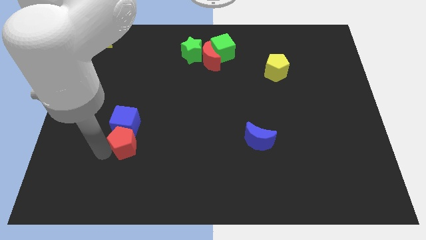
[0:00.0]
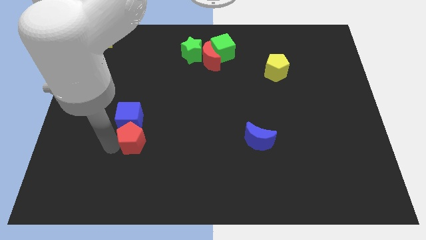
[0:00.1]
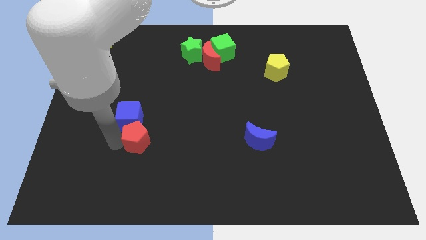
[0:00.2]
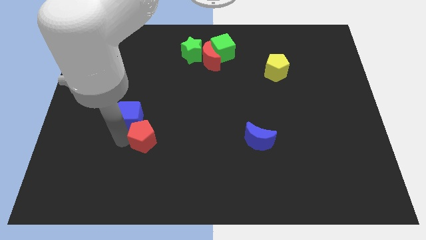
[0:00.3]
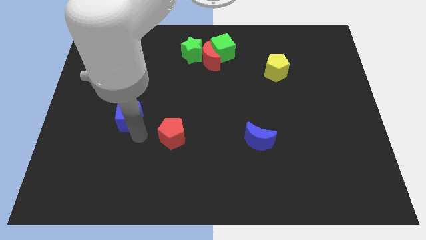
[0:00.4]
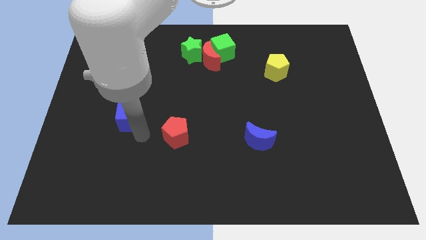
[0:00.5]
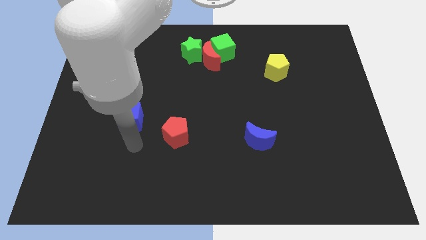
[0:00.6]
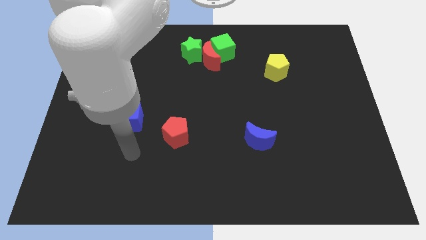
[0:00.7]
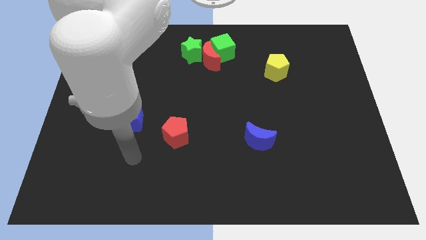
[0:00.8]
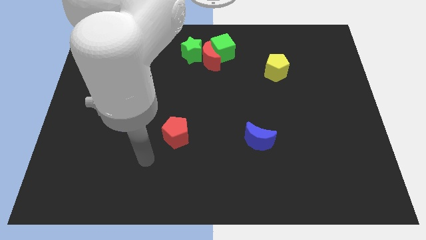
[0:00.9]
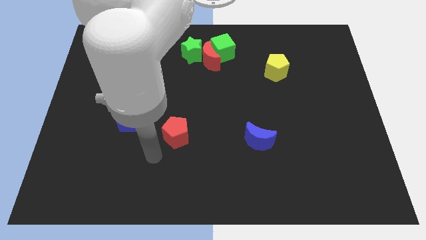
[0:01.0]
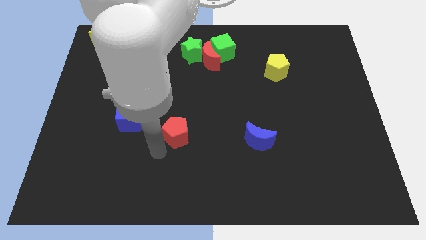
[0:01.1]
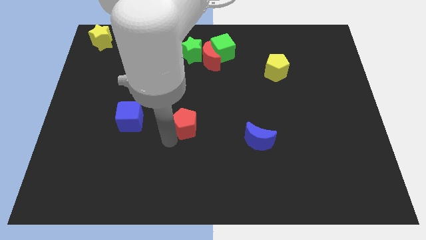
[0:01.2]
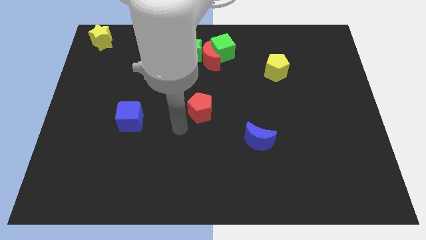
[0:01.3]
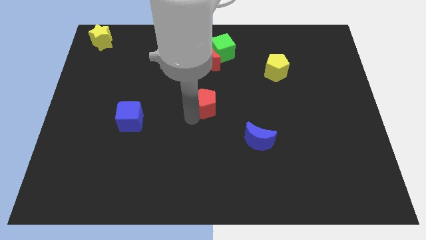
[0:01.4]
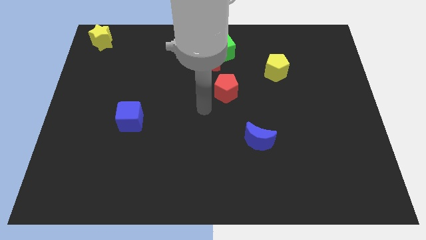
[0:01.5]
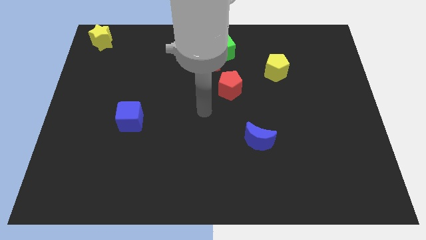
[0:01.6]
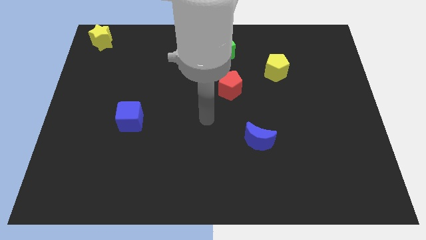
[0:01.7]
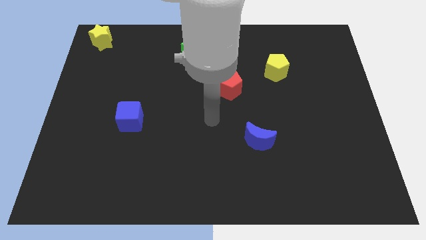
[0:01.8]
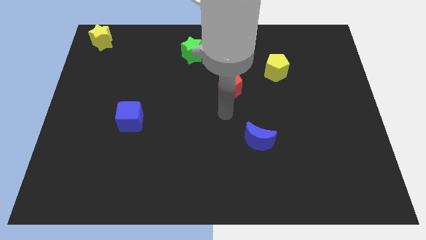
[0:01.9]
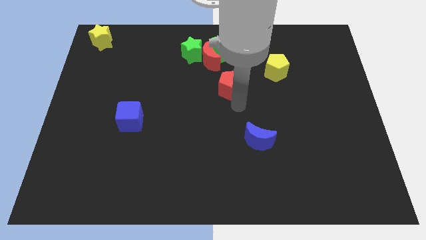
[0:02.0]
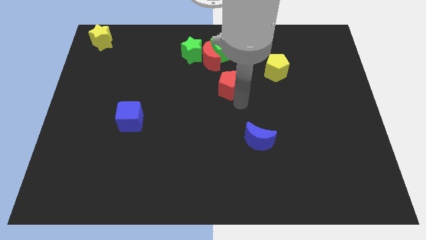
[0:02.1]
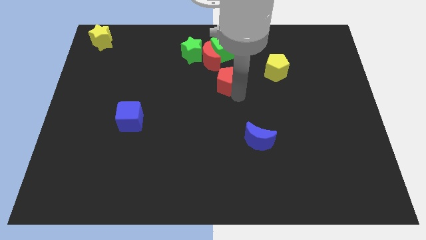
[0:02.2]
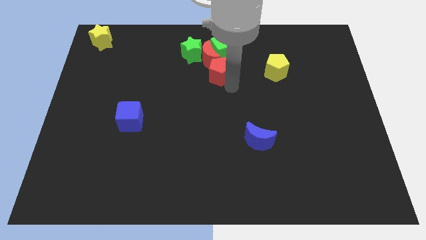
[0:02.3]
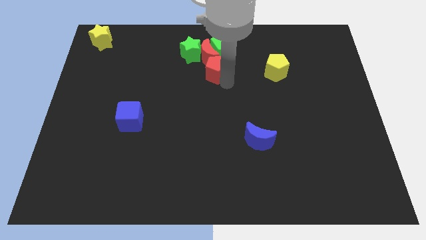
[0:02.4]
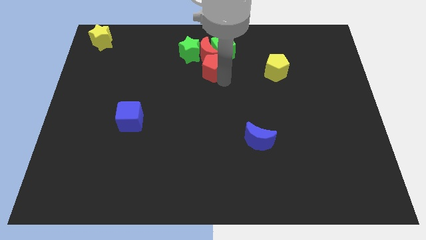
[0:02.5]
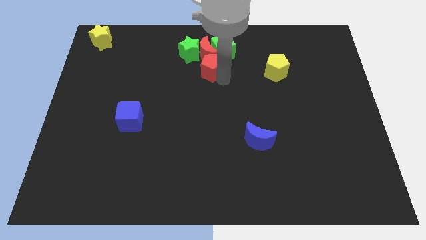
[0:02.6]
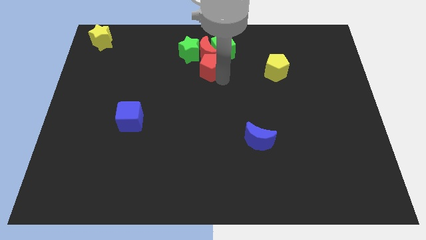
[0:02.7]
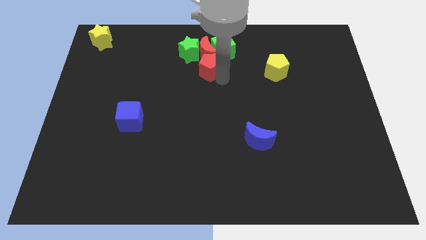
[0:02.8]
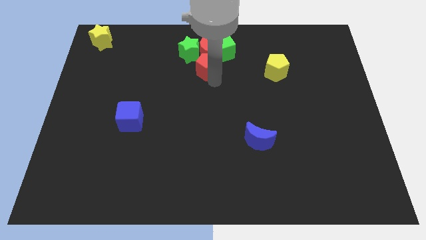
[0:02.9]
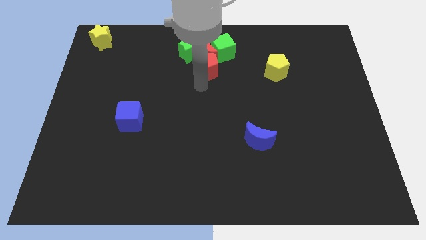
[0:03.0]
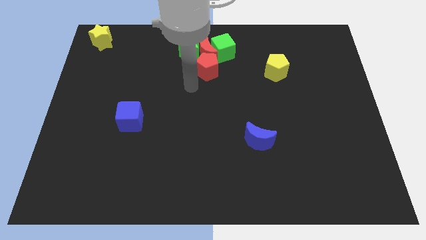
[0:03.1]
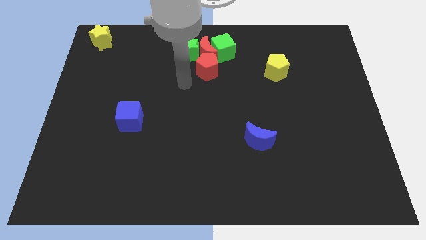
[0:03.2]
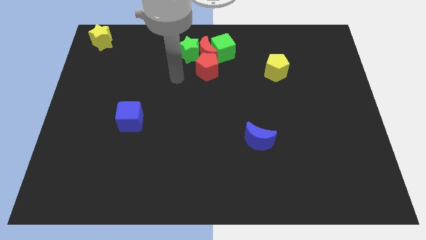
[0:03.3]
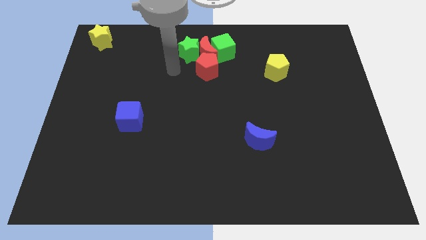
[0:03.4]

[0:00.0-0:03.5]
move the red pentagon below the red moon

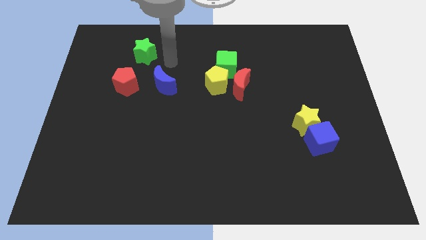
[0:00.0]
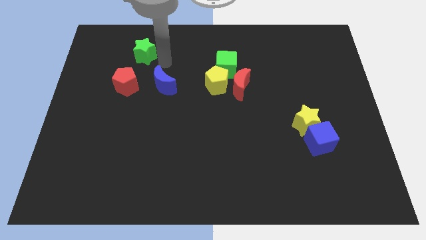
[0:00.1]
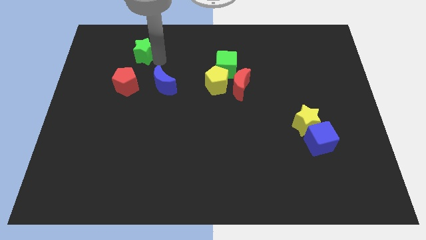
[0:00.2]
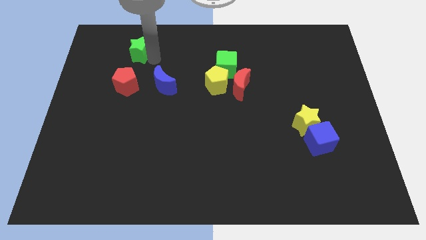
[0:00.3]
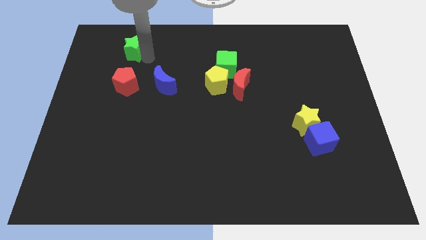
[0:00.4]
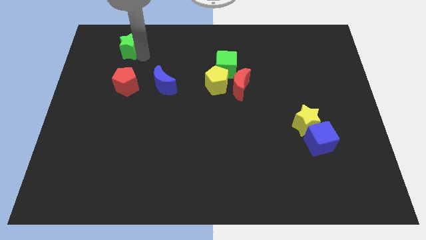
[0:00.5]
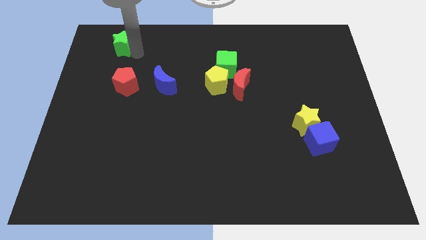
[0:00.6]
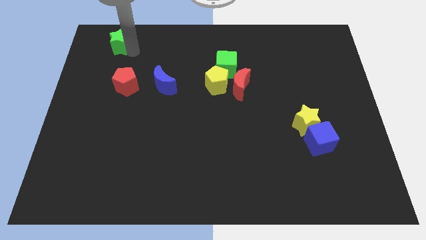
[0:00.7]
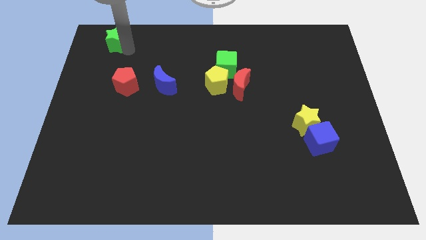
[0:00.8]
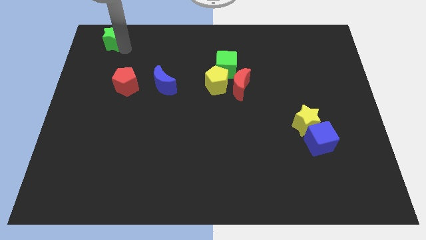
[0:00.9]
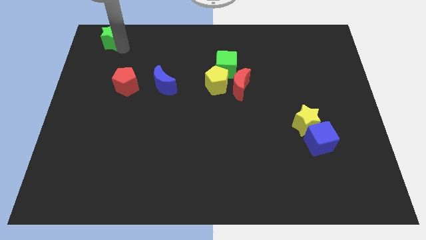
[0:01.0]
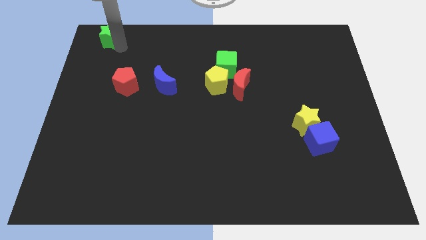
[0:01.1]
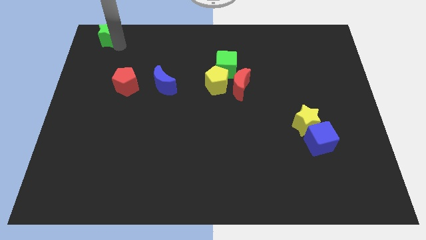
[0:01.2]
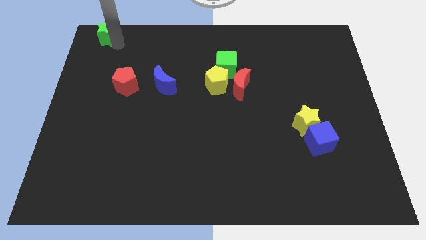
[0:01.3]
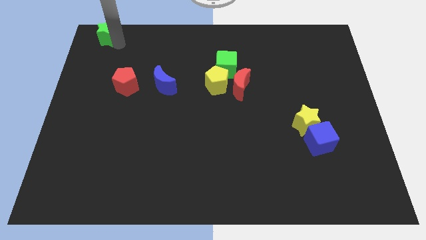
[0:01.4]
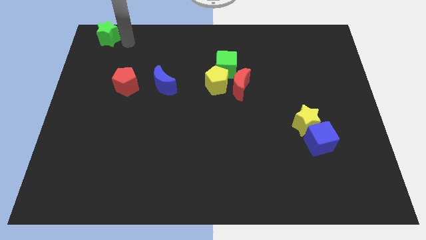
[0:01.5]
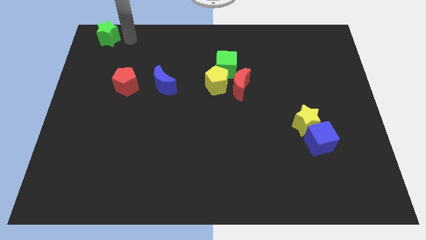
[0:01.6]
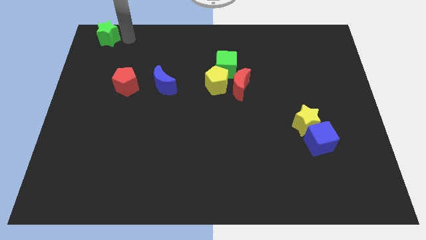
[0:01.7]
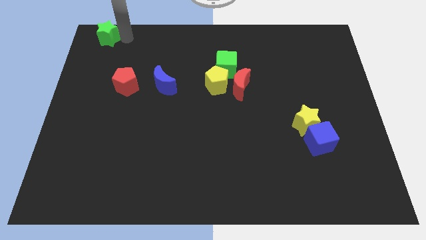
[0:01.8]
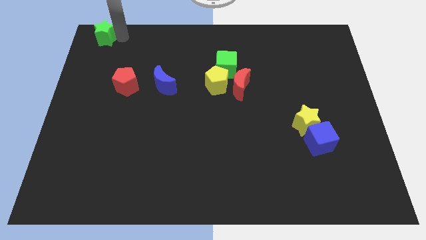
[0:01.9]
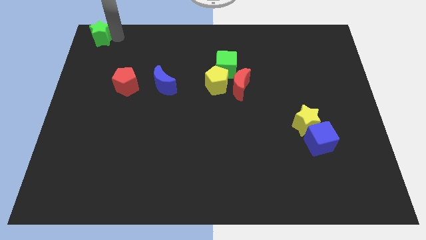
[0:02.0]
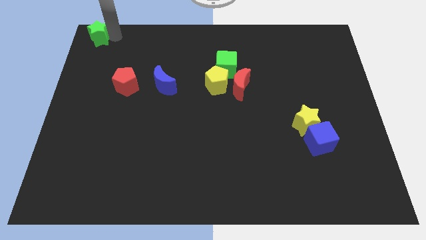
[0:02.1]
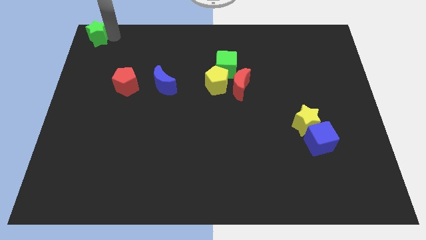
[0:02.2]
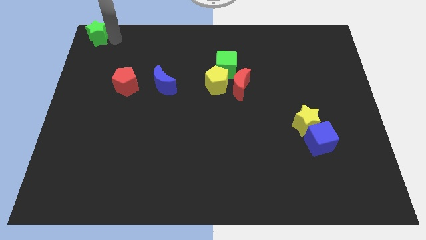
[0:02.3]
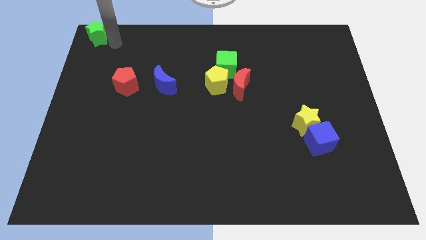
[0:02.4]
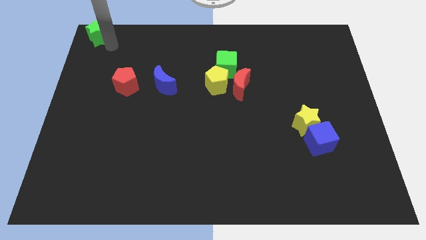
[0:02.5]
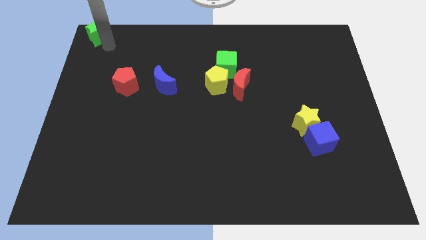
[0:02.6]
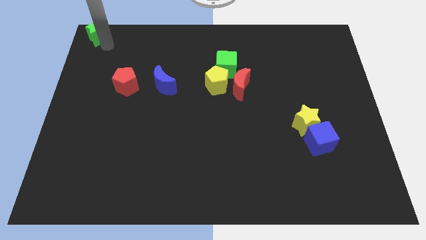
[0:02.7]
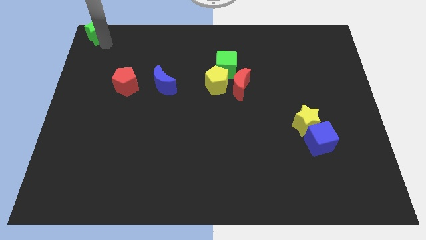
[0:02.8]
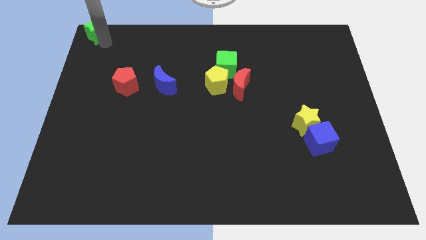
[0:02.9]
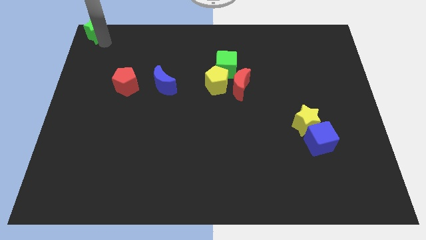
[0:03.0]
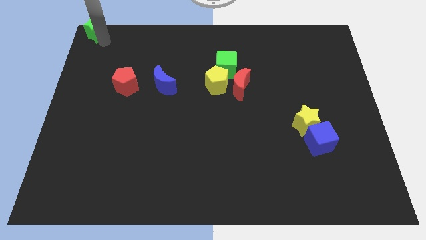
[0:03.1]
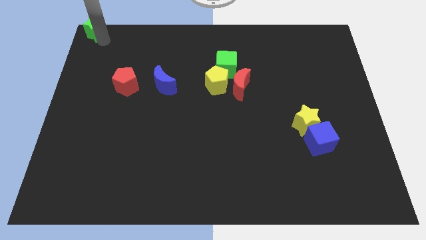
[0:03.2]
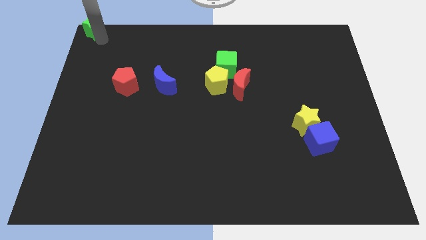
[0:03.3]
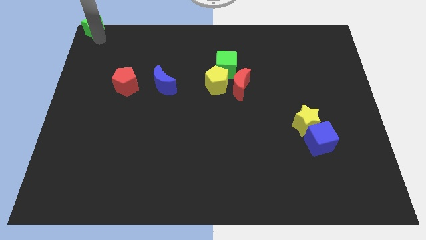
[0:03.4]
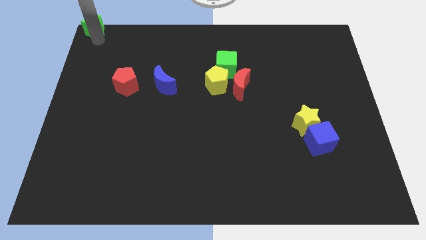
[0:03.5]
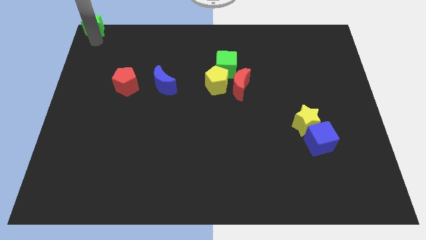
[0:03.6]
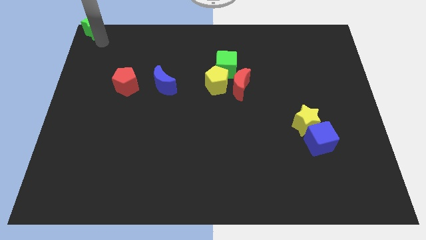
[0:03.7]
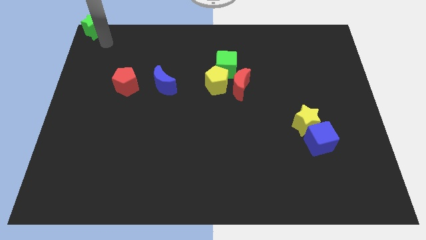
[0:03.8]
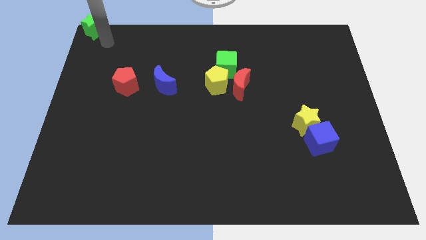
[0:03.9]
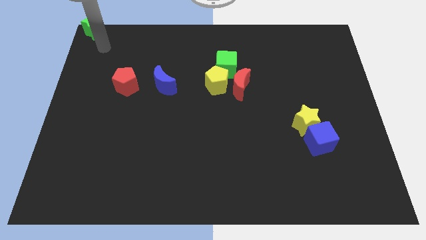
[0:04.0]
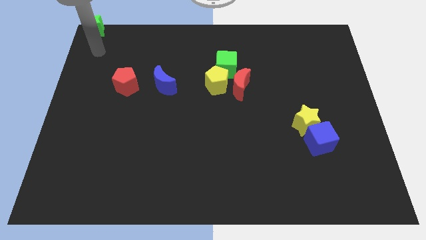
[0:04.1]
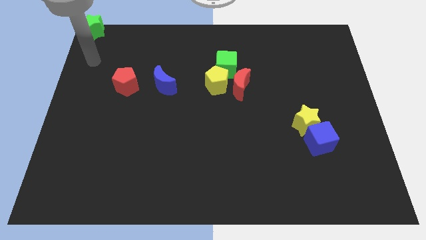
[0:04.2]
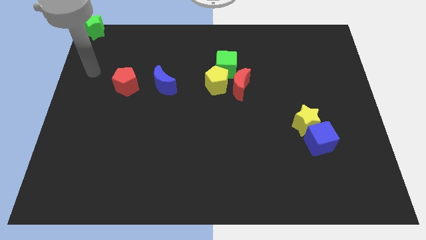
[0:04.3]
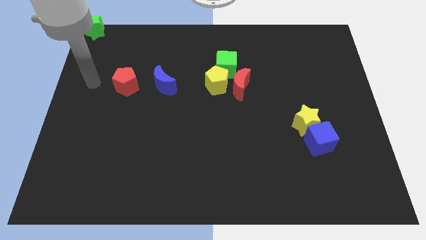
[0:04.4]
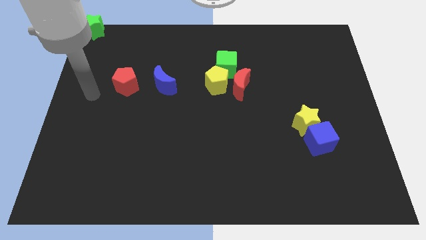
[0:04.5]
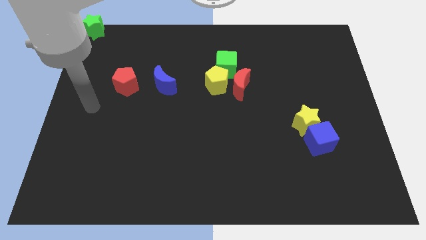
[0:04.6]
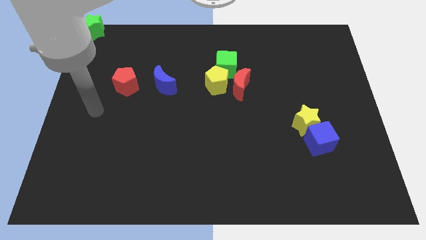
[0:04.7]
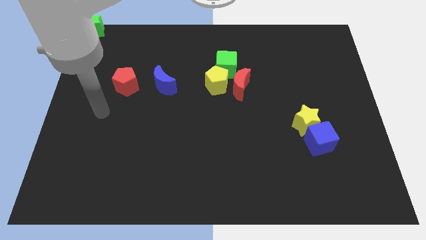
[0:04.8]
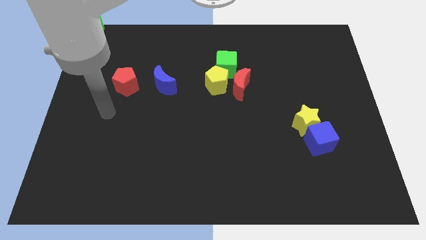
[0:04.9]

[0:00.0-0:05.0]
place the green star at the top left

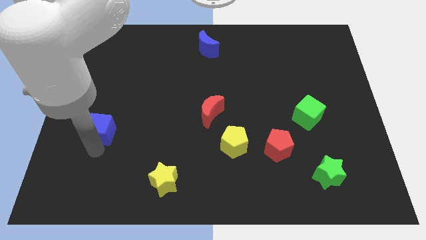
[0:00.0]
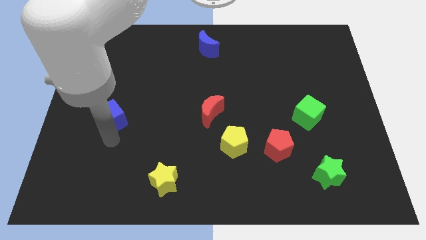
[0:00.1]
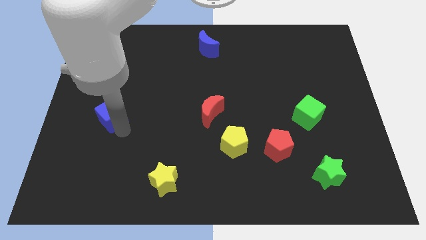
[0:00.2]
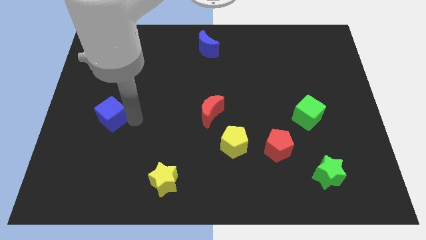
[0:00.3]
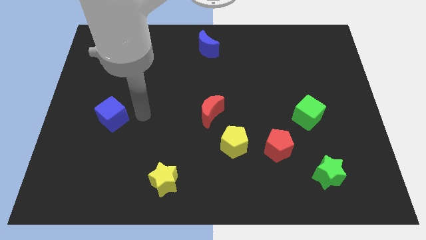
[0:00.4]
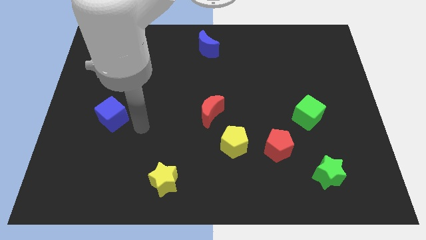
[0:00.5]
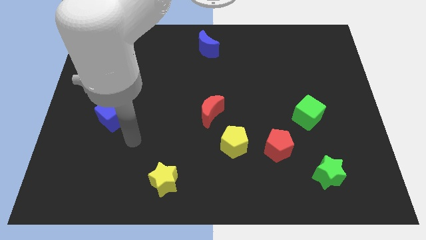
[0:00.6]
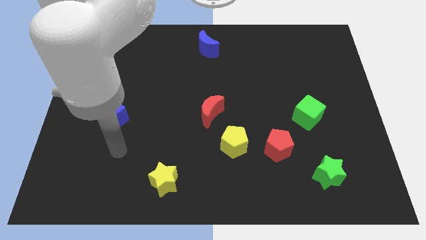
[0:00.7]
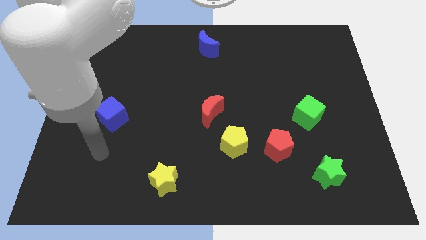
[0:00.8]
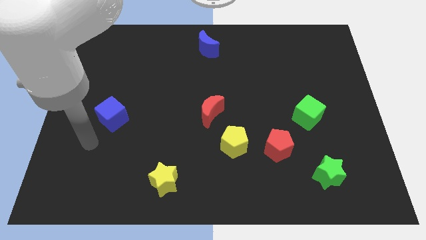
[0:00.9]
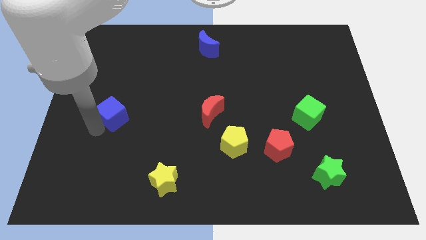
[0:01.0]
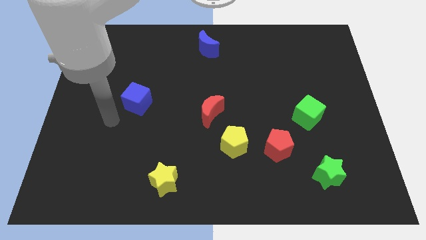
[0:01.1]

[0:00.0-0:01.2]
push the blue cube slightly towards the top
